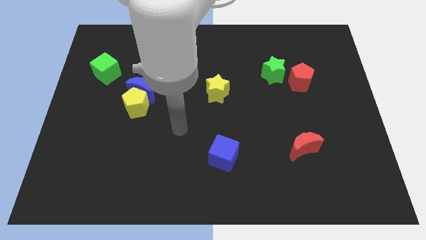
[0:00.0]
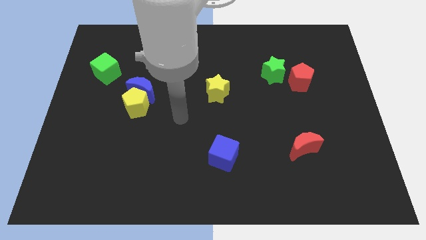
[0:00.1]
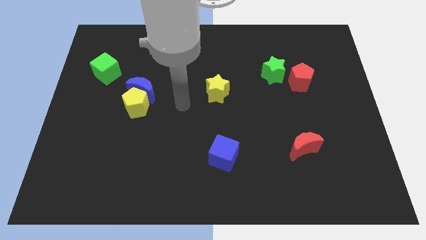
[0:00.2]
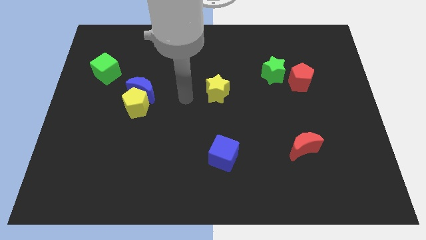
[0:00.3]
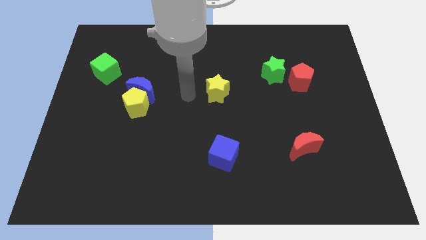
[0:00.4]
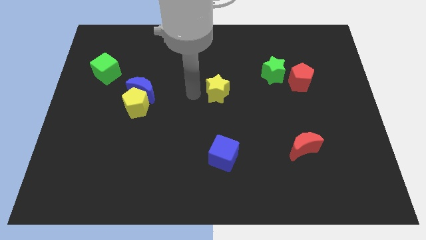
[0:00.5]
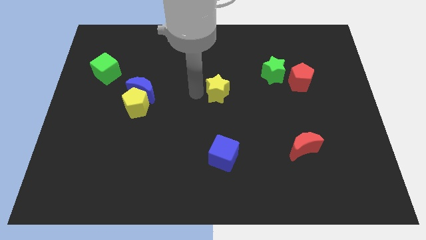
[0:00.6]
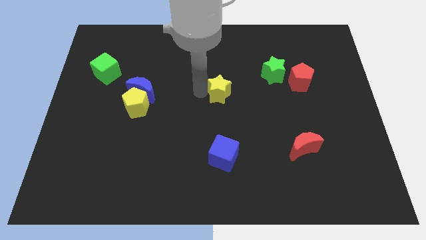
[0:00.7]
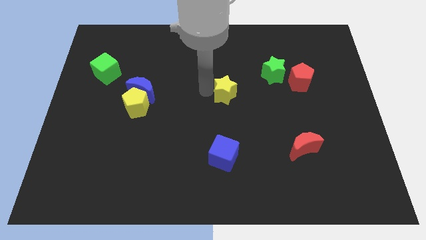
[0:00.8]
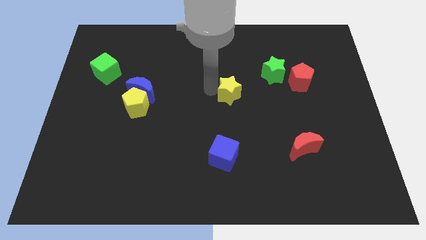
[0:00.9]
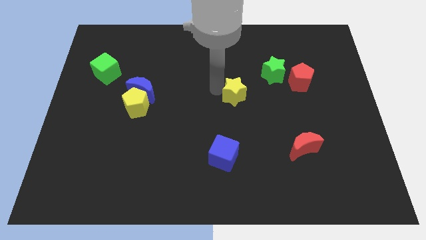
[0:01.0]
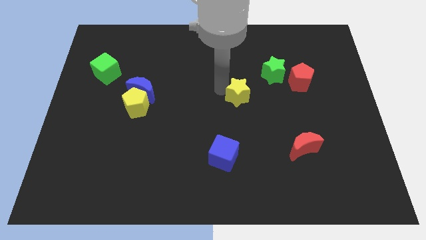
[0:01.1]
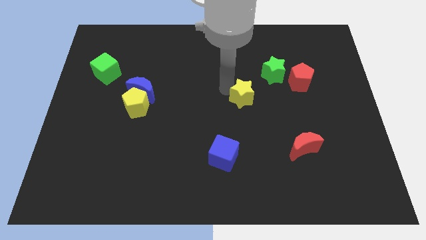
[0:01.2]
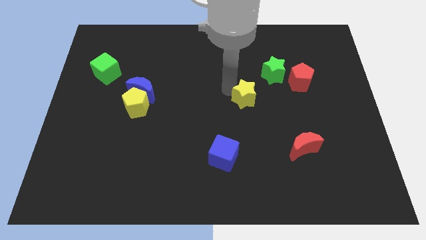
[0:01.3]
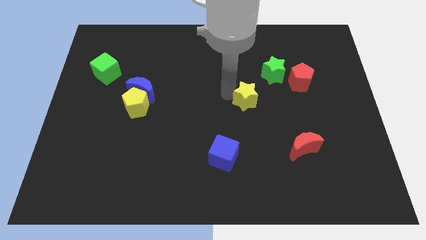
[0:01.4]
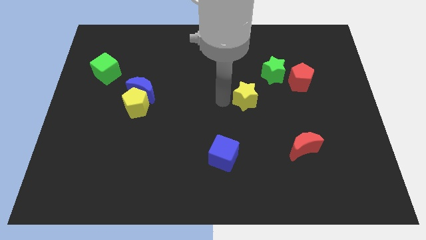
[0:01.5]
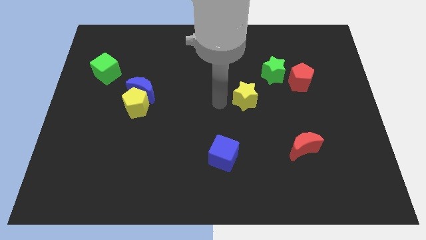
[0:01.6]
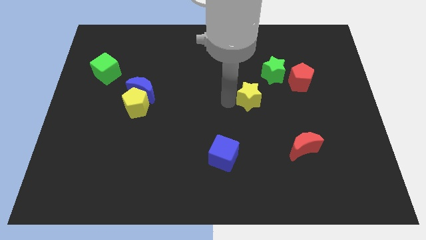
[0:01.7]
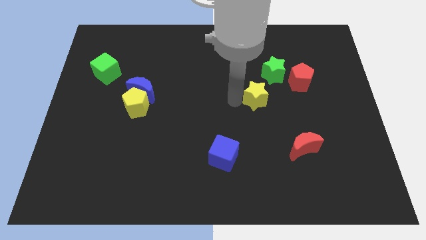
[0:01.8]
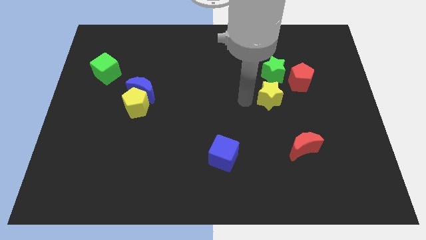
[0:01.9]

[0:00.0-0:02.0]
place yellow star vertically below the green star

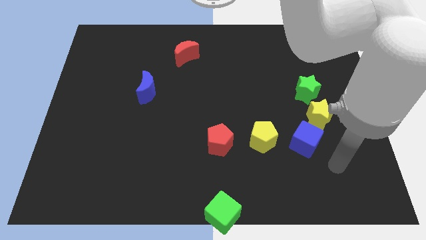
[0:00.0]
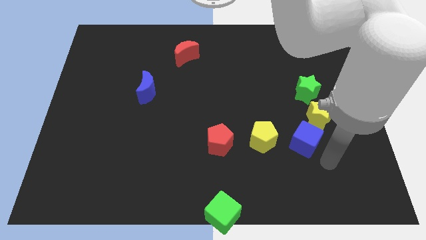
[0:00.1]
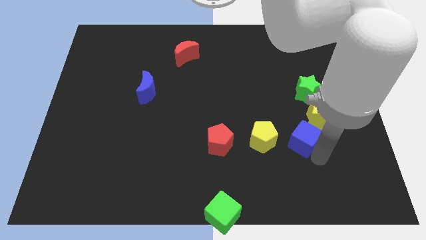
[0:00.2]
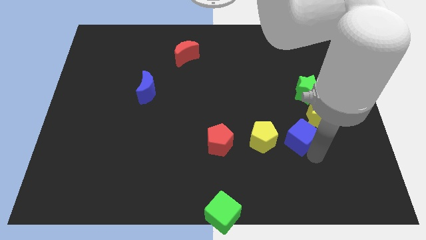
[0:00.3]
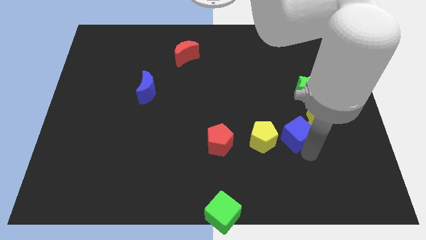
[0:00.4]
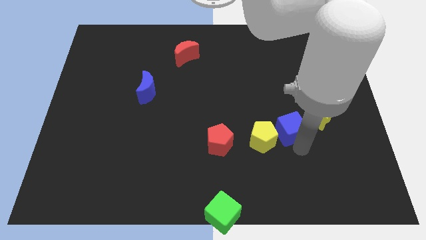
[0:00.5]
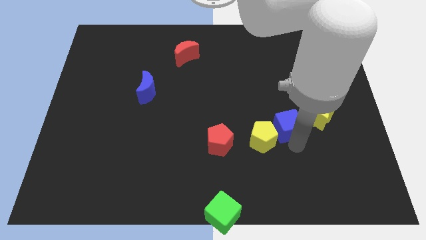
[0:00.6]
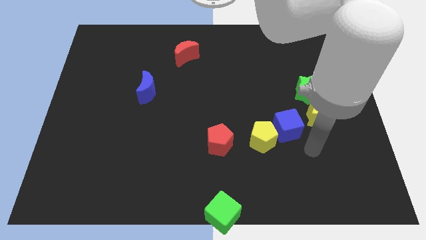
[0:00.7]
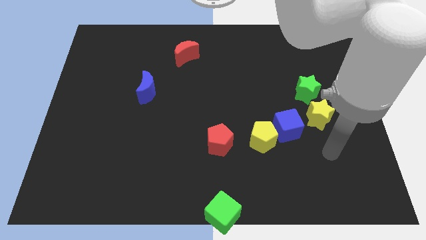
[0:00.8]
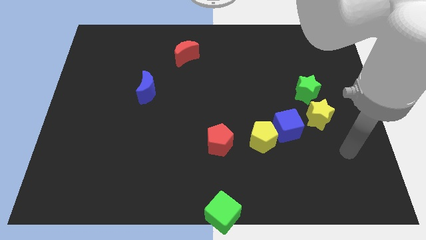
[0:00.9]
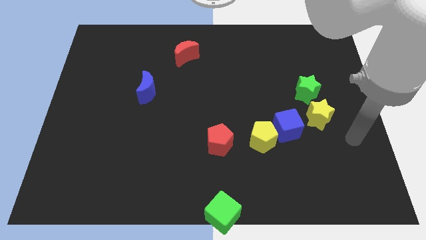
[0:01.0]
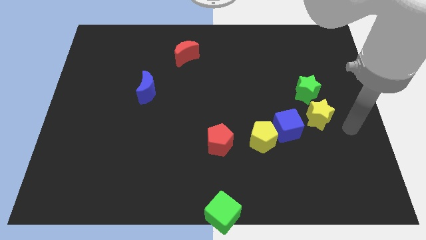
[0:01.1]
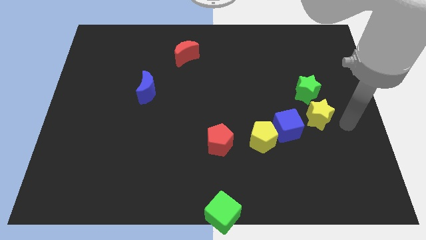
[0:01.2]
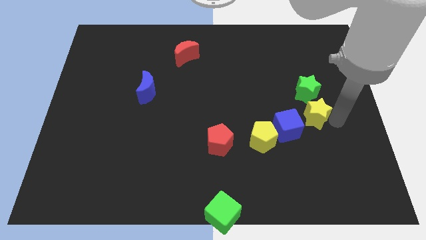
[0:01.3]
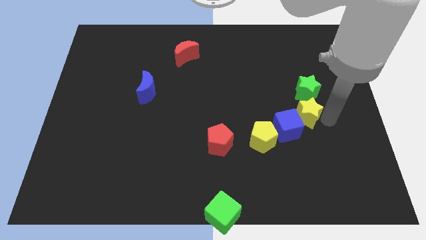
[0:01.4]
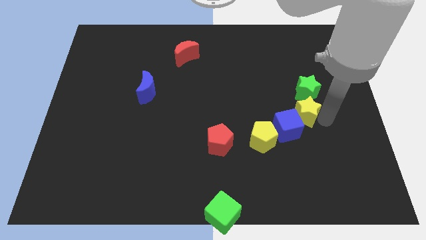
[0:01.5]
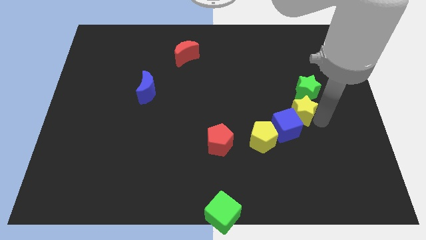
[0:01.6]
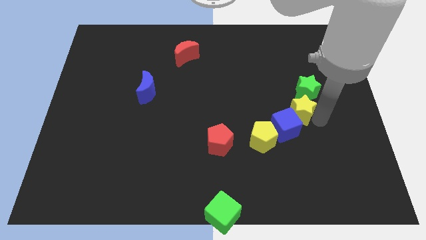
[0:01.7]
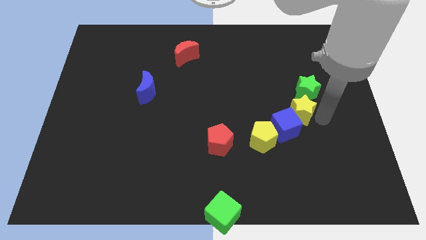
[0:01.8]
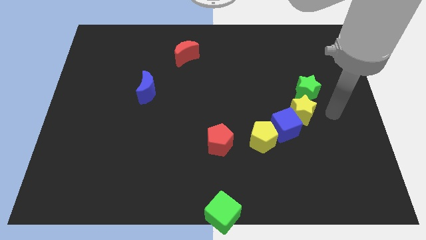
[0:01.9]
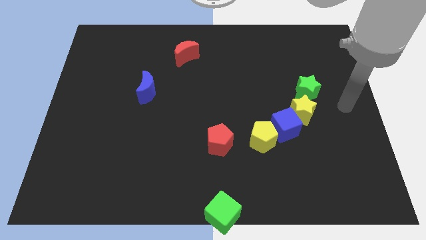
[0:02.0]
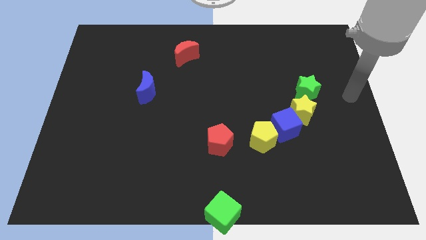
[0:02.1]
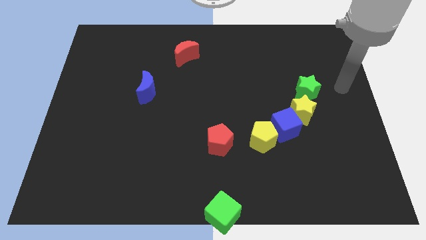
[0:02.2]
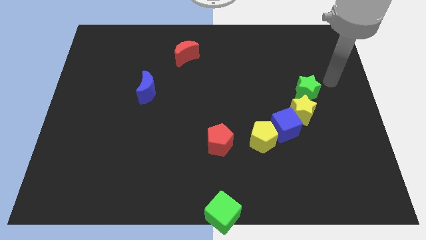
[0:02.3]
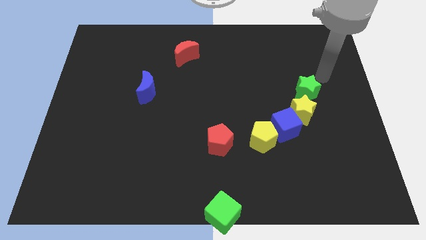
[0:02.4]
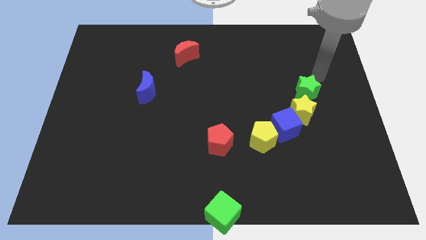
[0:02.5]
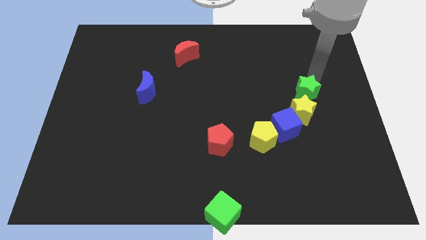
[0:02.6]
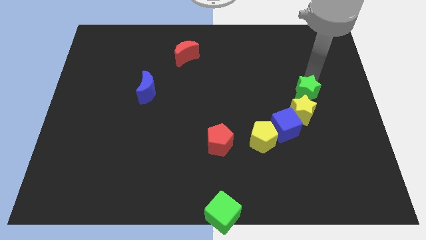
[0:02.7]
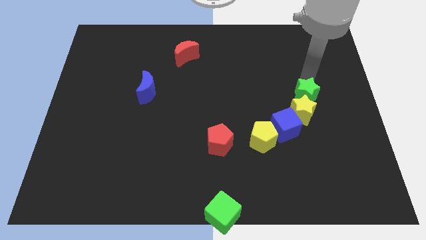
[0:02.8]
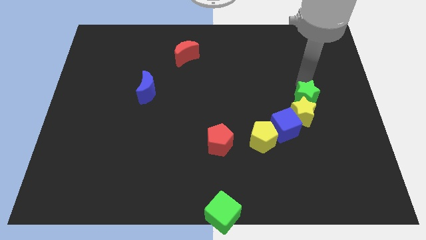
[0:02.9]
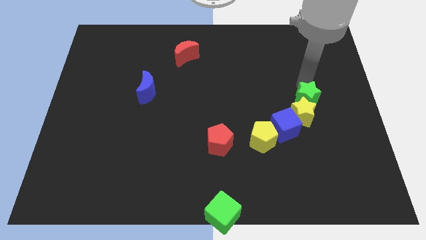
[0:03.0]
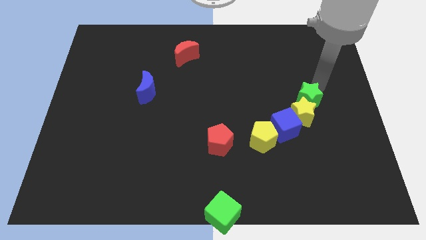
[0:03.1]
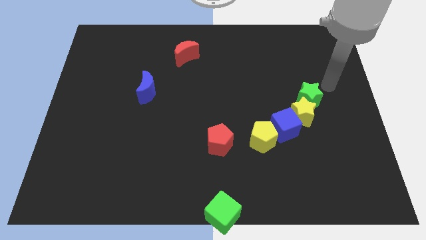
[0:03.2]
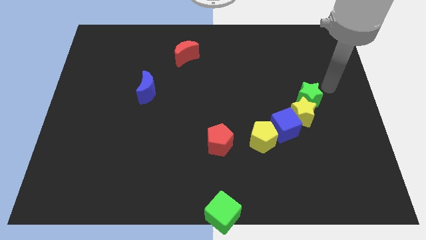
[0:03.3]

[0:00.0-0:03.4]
push the green star into the yellow star

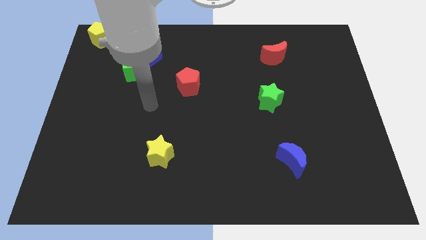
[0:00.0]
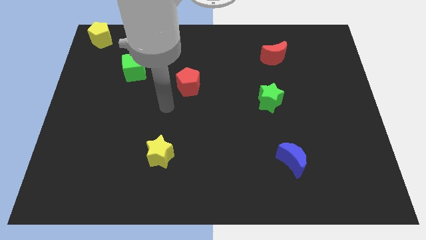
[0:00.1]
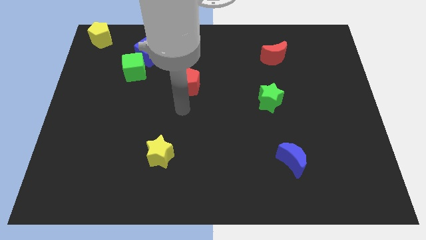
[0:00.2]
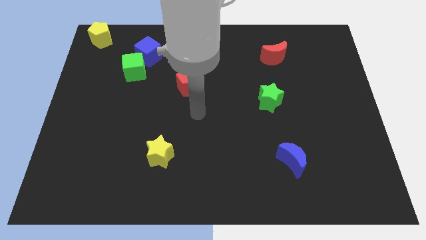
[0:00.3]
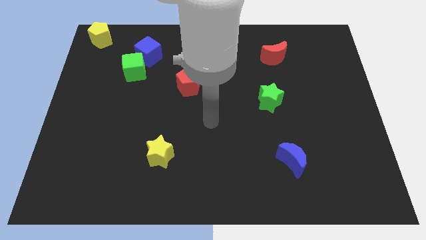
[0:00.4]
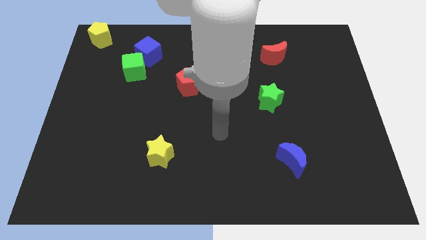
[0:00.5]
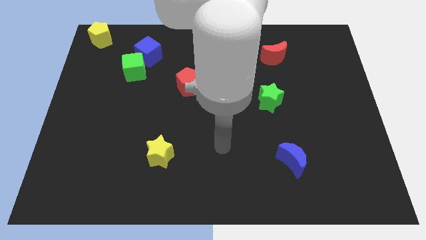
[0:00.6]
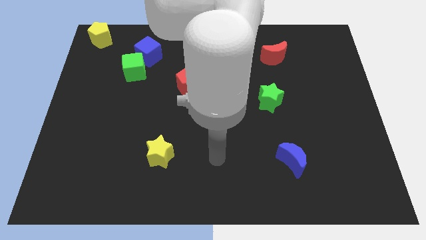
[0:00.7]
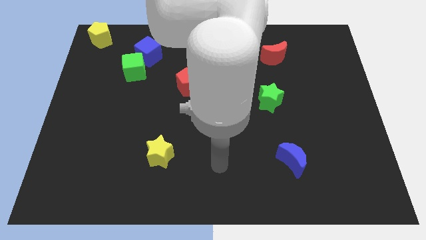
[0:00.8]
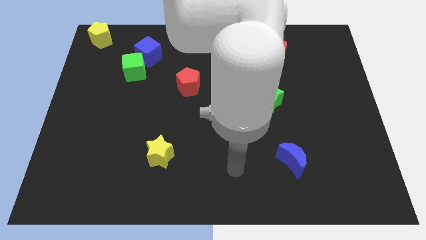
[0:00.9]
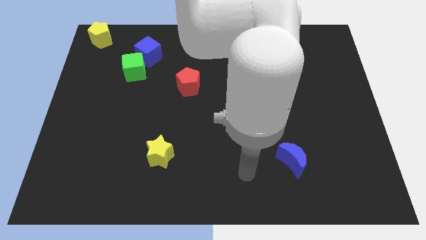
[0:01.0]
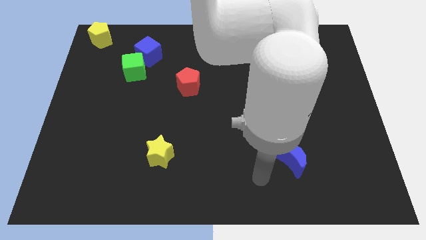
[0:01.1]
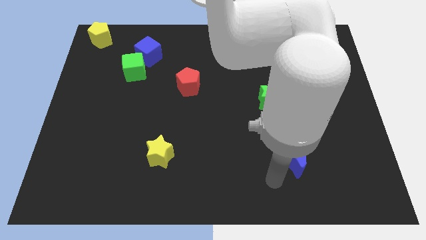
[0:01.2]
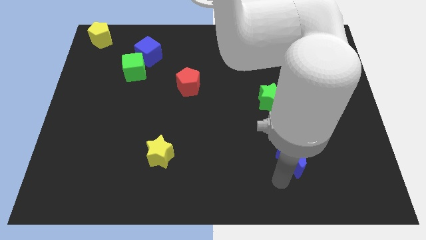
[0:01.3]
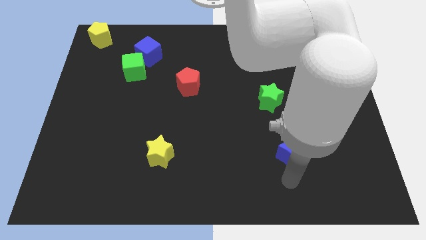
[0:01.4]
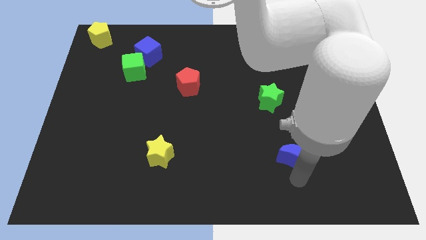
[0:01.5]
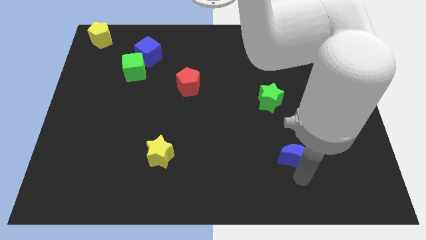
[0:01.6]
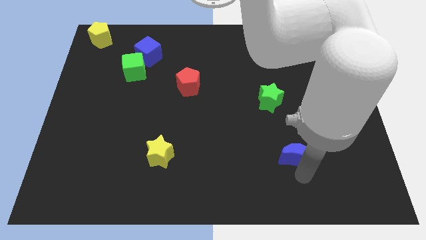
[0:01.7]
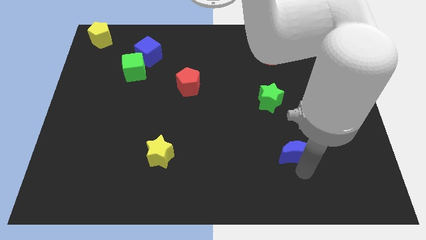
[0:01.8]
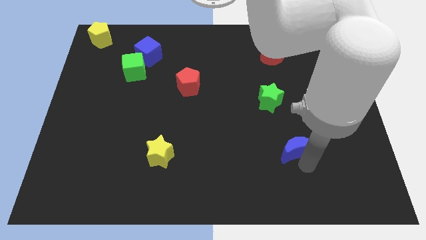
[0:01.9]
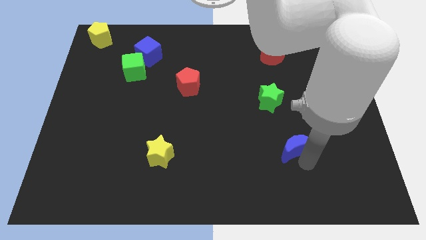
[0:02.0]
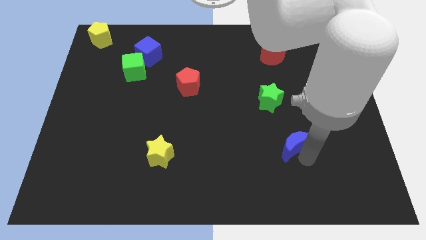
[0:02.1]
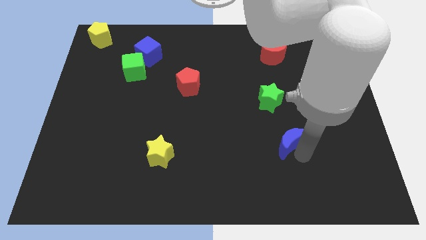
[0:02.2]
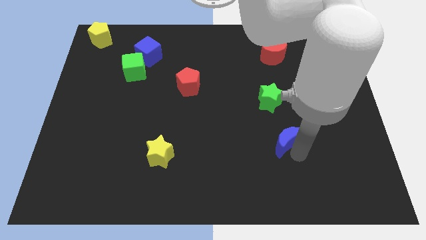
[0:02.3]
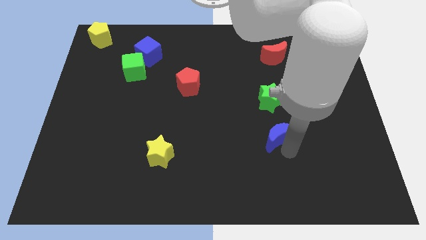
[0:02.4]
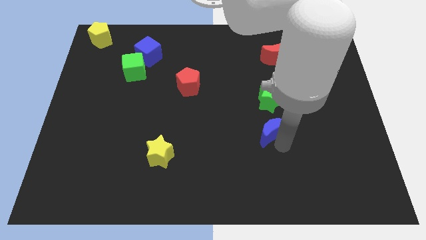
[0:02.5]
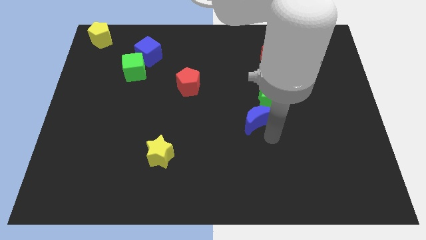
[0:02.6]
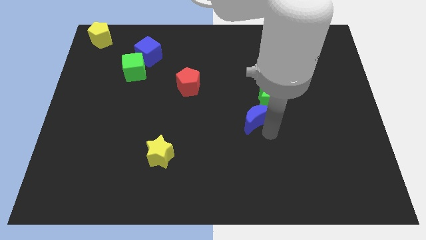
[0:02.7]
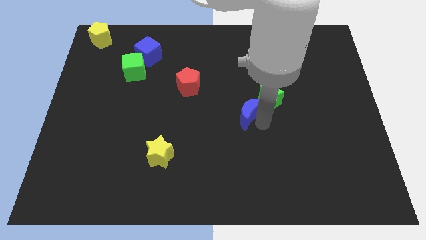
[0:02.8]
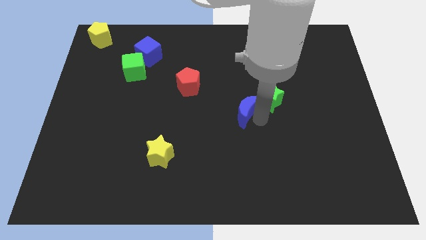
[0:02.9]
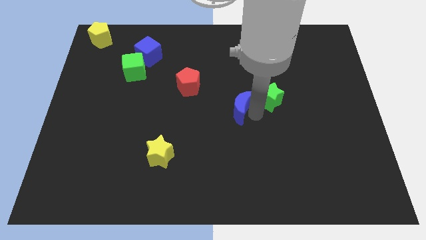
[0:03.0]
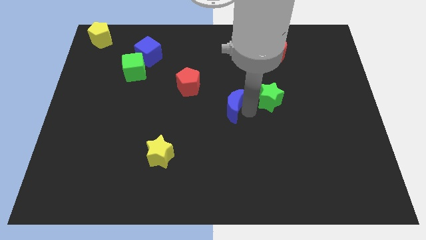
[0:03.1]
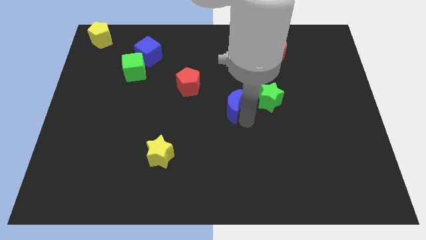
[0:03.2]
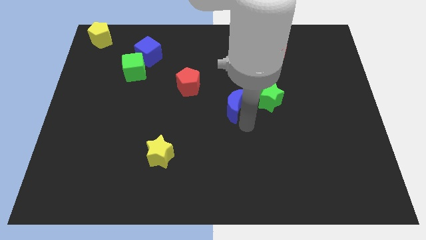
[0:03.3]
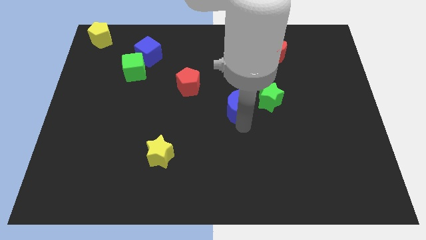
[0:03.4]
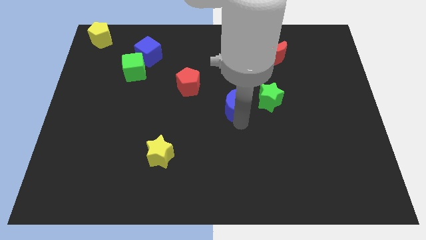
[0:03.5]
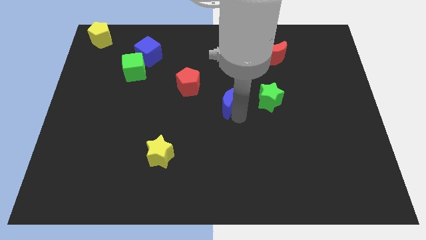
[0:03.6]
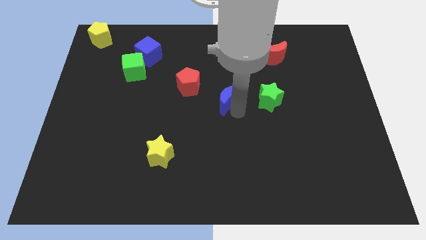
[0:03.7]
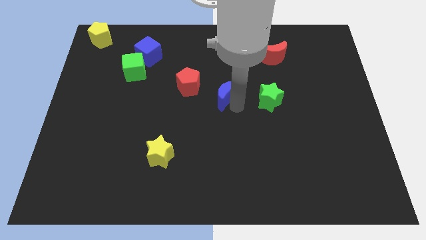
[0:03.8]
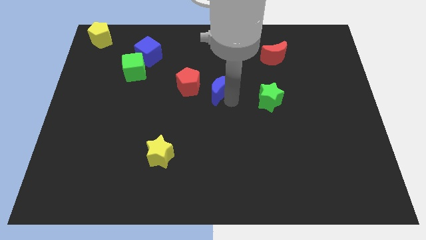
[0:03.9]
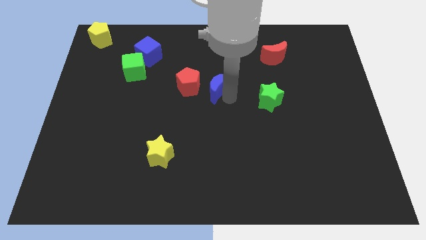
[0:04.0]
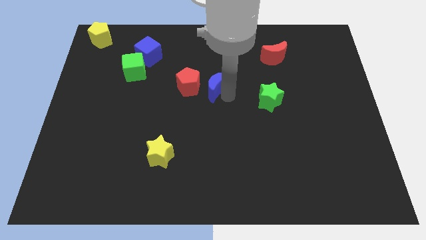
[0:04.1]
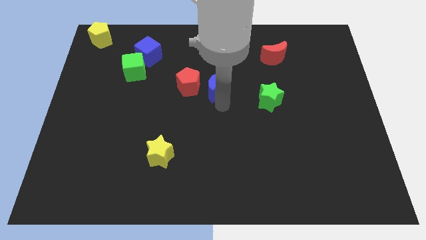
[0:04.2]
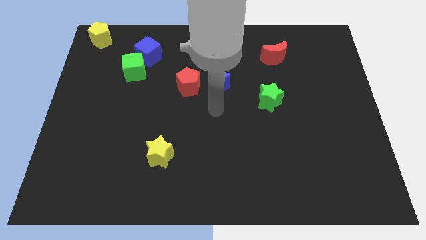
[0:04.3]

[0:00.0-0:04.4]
place the blue crescent in between red pentagon and green star
